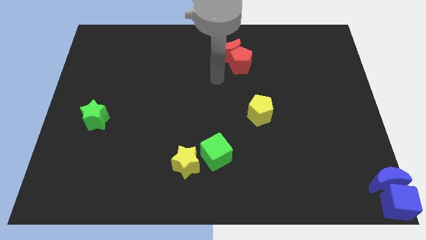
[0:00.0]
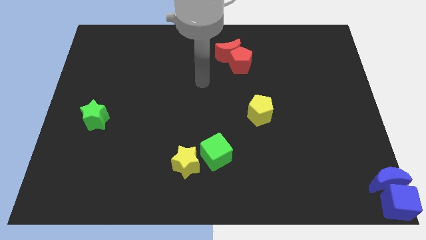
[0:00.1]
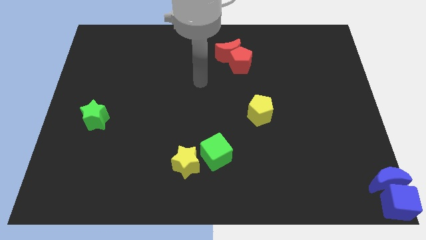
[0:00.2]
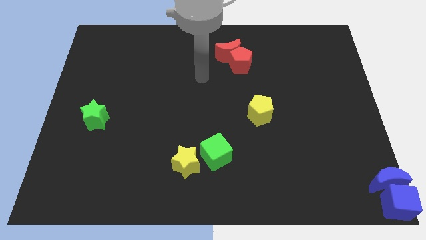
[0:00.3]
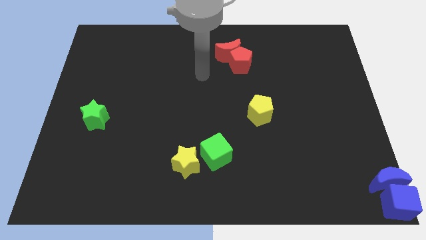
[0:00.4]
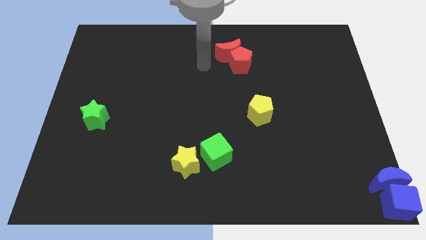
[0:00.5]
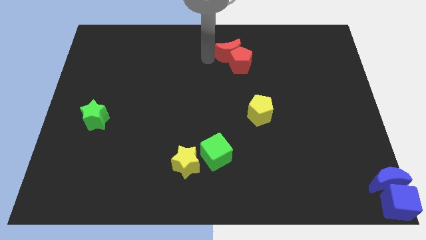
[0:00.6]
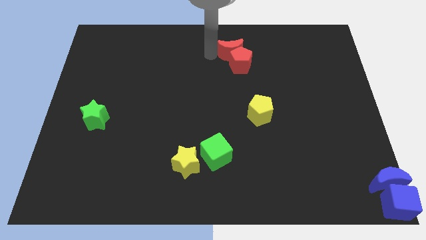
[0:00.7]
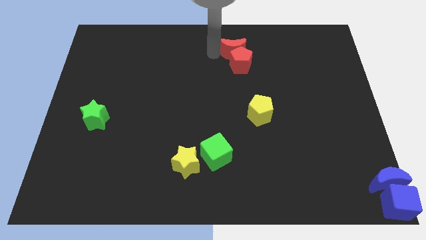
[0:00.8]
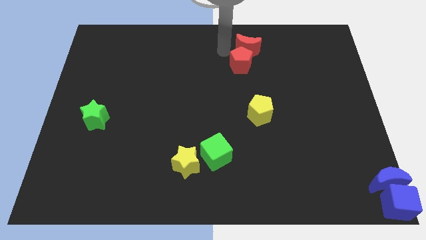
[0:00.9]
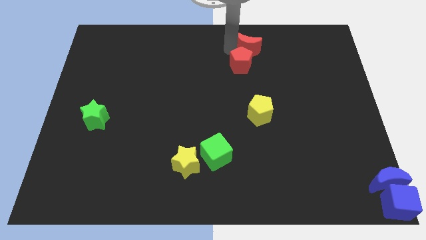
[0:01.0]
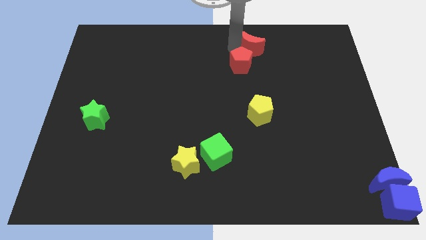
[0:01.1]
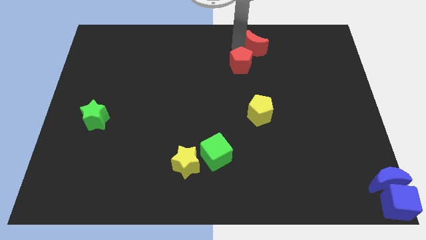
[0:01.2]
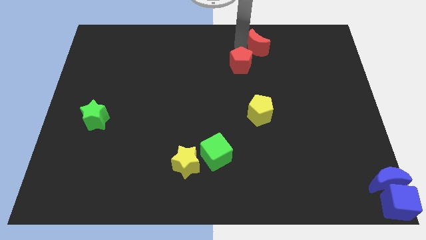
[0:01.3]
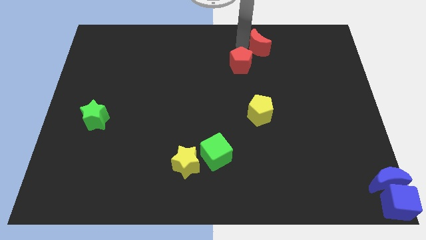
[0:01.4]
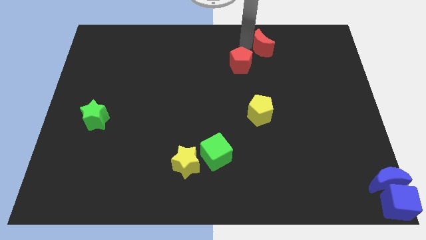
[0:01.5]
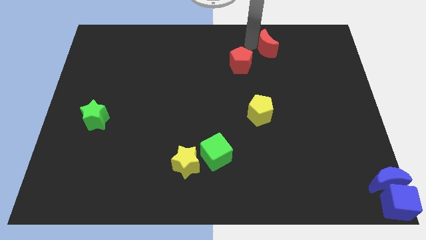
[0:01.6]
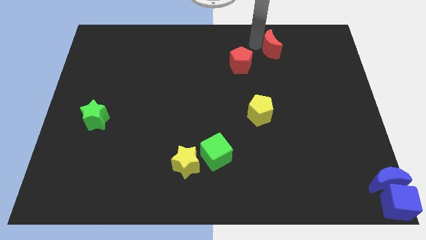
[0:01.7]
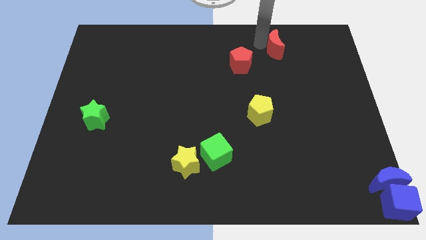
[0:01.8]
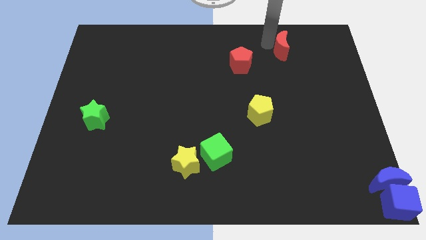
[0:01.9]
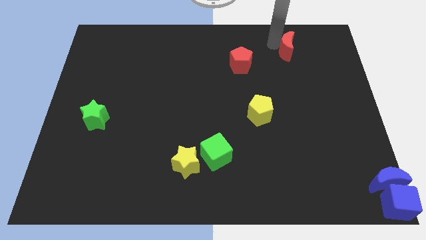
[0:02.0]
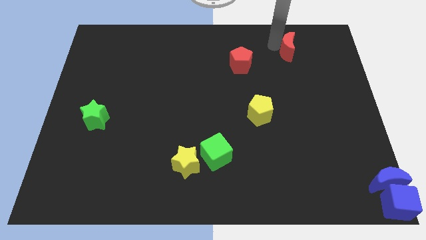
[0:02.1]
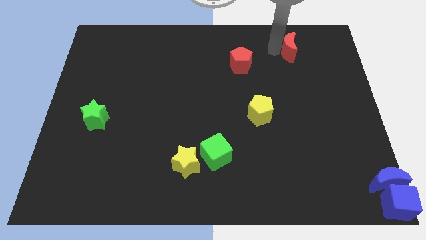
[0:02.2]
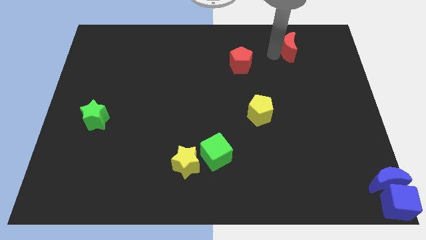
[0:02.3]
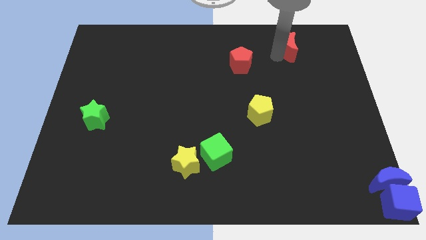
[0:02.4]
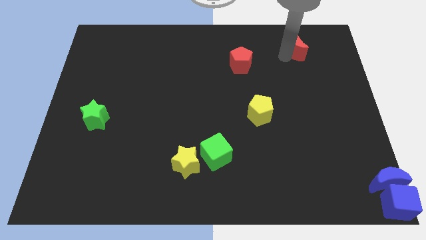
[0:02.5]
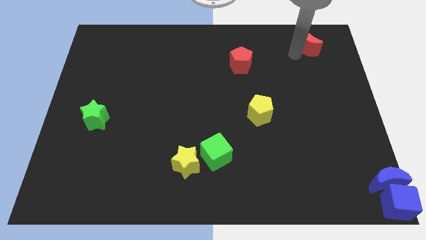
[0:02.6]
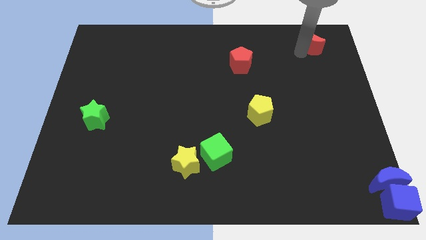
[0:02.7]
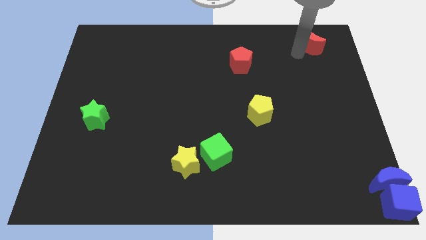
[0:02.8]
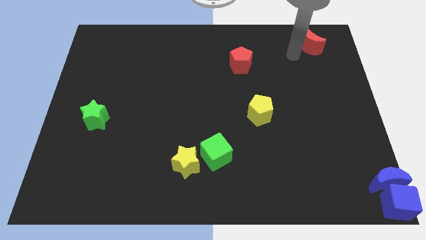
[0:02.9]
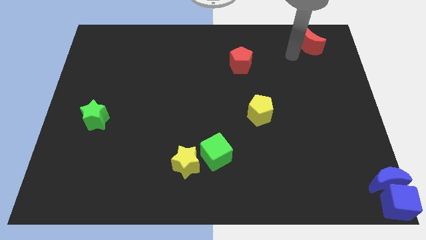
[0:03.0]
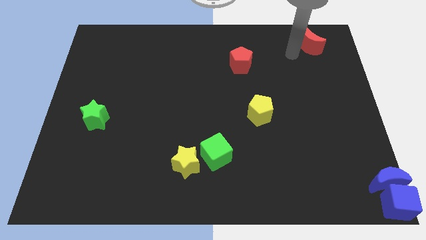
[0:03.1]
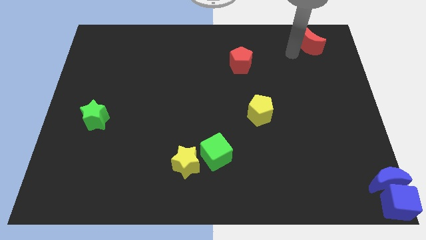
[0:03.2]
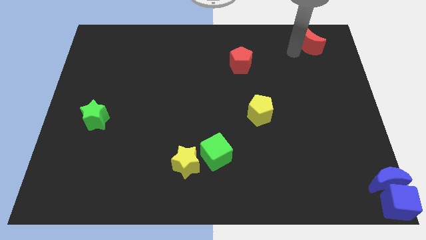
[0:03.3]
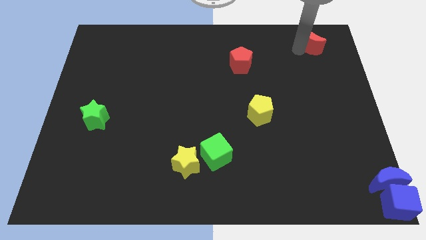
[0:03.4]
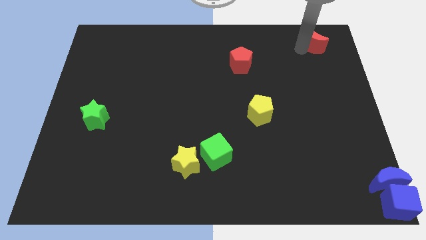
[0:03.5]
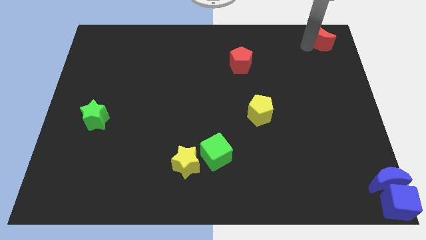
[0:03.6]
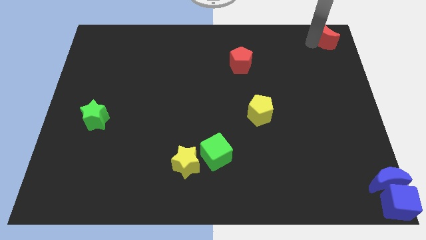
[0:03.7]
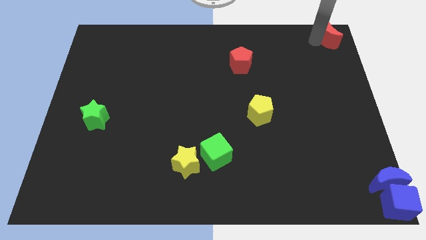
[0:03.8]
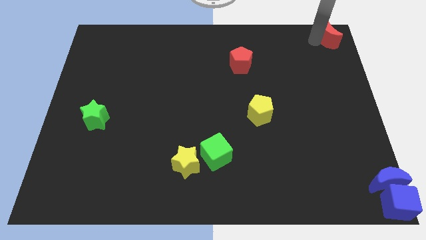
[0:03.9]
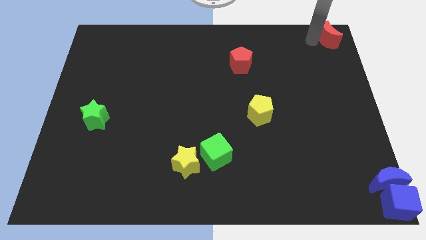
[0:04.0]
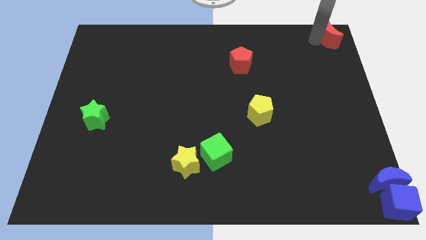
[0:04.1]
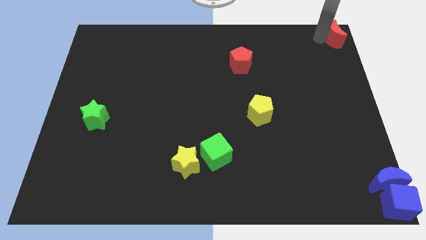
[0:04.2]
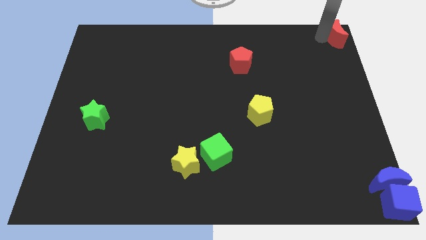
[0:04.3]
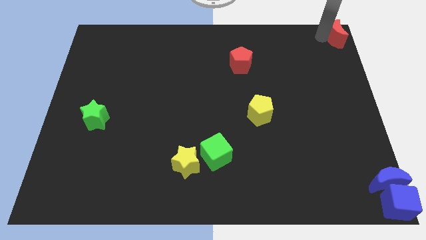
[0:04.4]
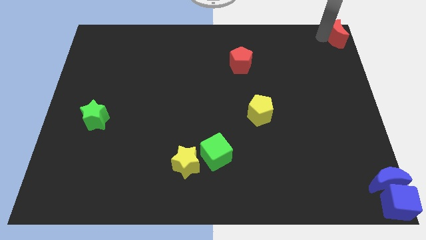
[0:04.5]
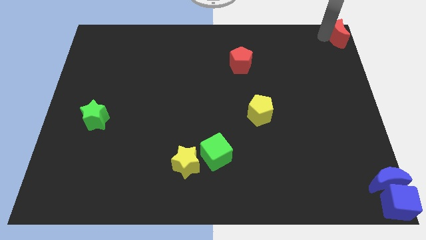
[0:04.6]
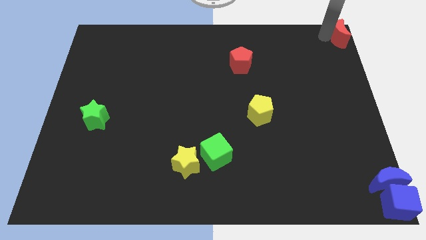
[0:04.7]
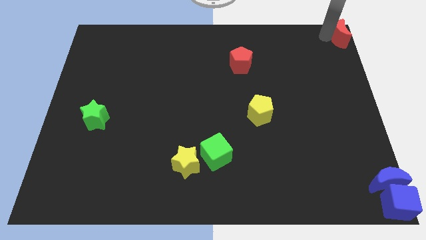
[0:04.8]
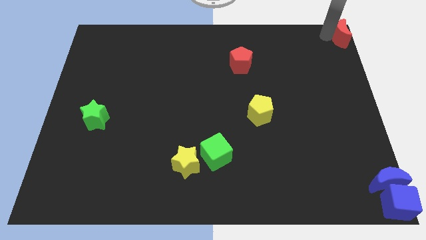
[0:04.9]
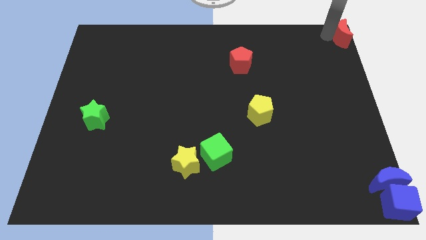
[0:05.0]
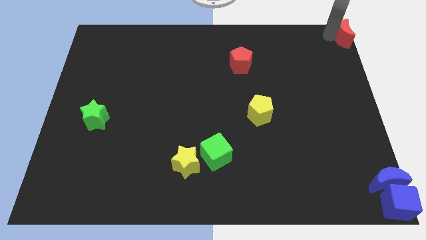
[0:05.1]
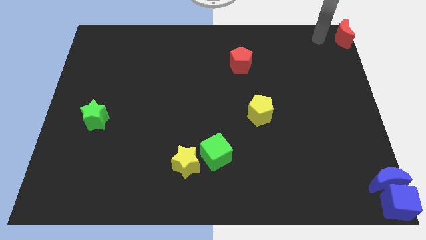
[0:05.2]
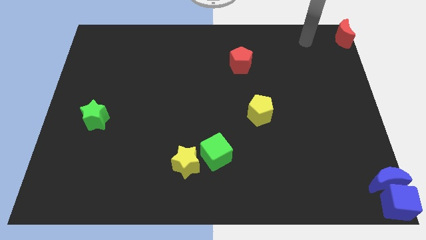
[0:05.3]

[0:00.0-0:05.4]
push the red crescent to the top right corner of the board

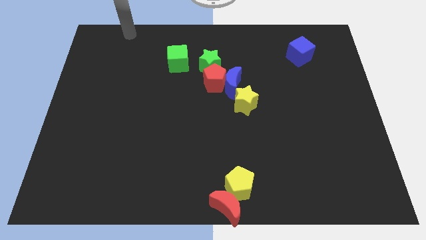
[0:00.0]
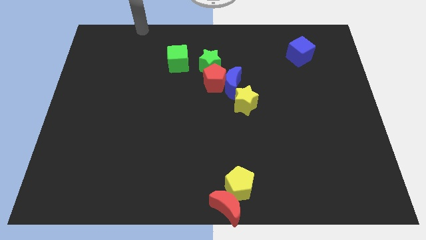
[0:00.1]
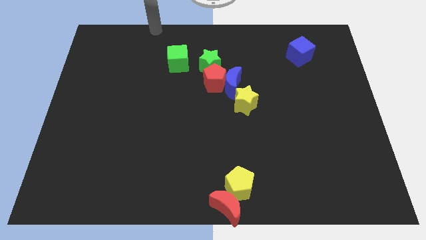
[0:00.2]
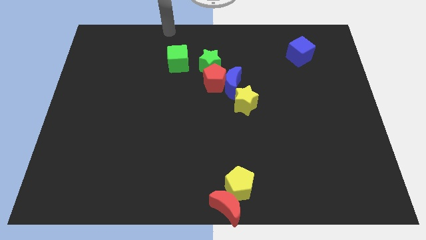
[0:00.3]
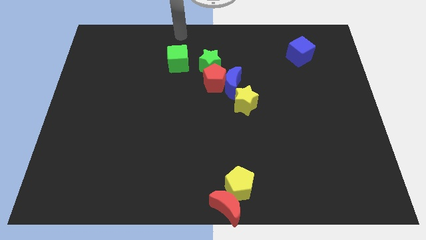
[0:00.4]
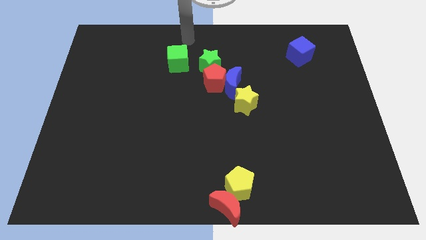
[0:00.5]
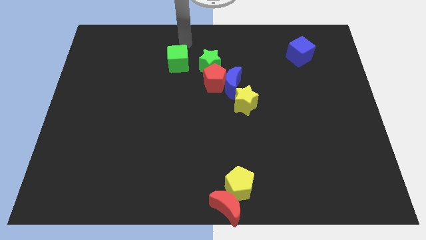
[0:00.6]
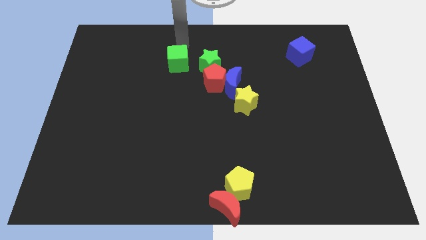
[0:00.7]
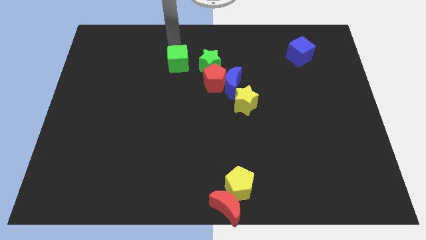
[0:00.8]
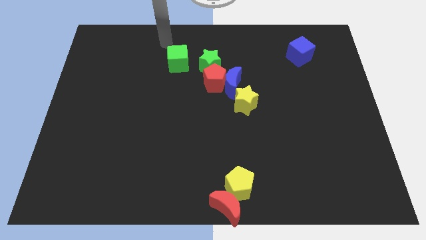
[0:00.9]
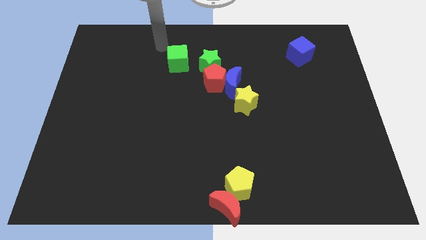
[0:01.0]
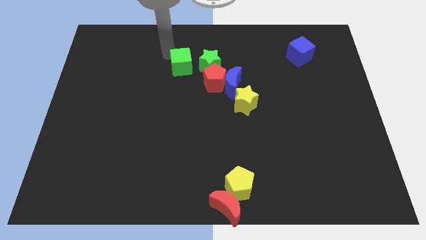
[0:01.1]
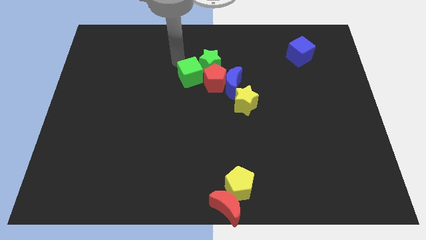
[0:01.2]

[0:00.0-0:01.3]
push the green cube towards the center of the board

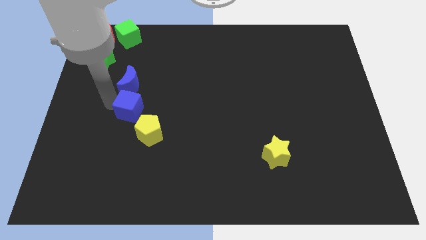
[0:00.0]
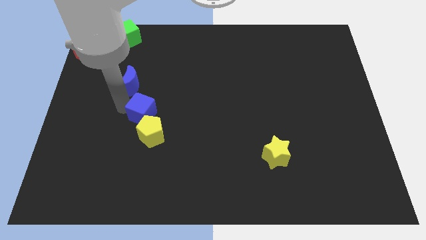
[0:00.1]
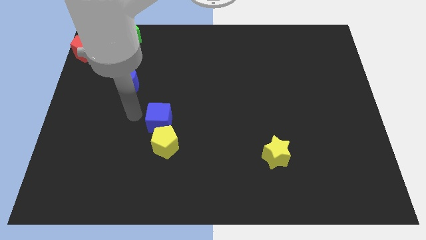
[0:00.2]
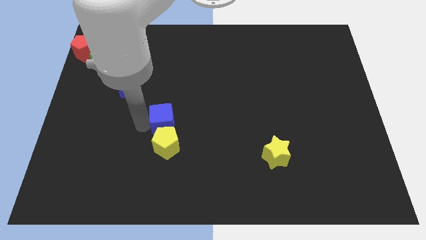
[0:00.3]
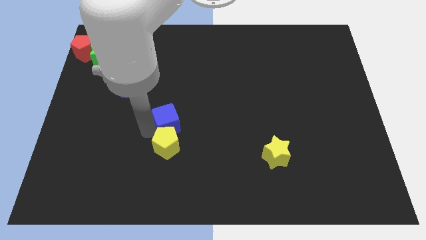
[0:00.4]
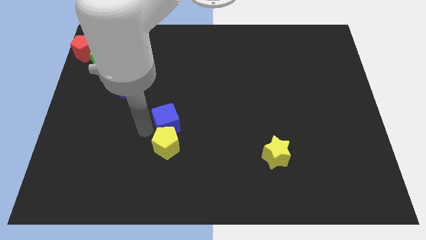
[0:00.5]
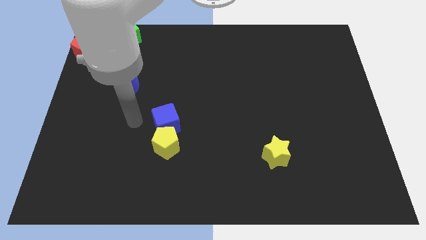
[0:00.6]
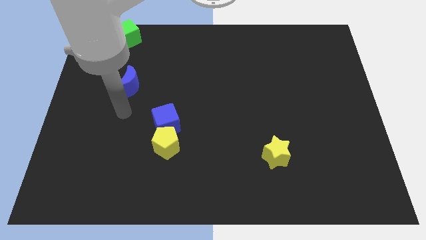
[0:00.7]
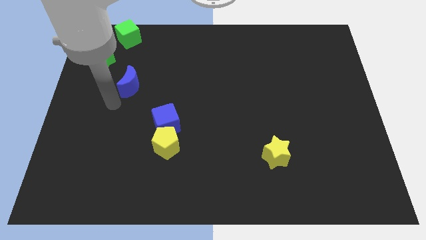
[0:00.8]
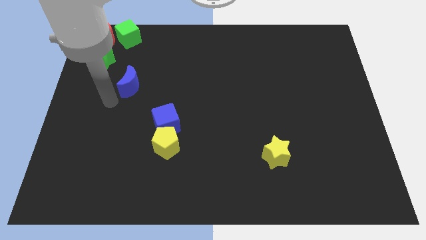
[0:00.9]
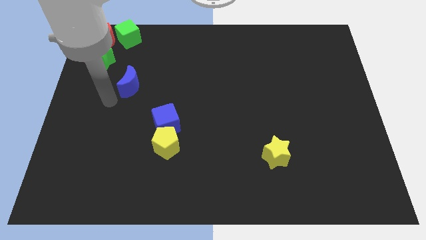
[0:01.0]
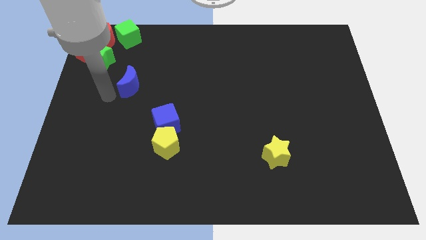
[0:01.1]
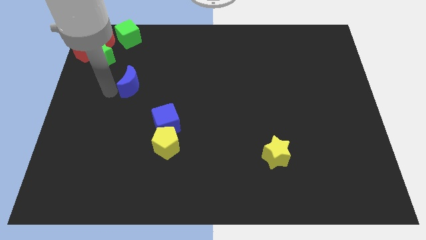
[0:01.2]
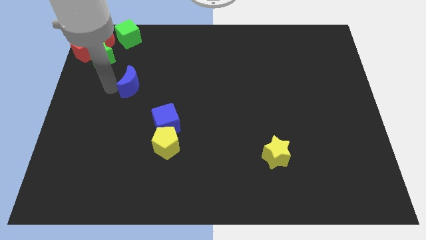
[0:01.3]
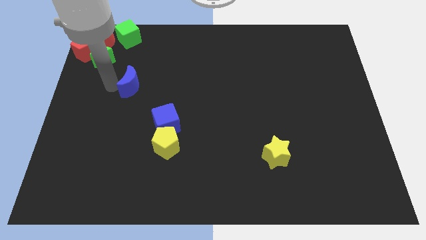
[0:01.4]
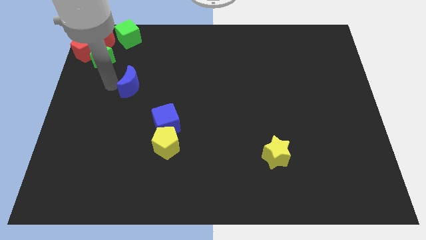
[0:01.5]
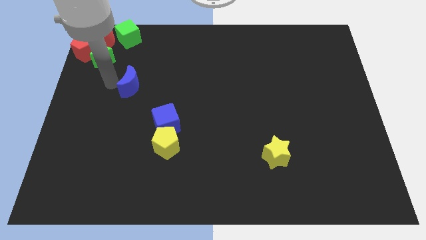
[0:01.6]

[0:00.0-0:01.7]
drag the blue cube close to the yellow pentagon

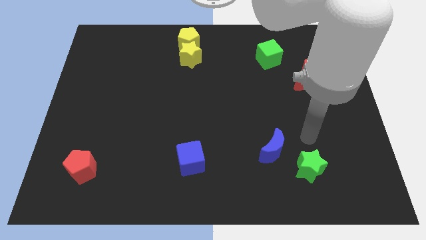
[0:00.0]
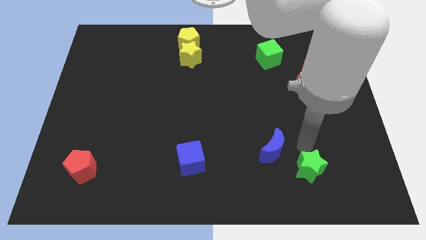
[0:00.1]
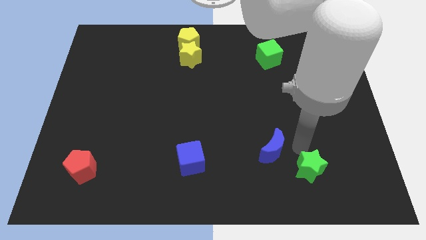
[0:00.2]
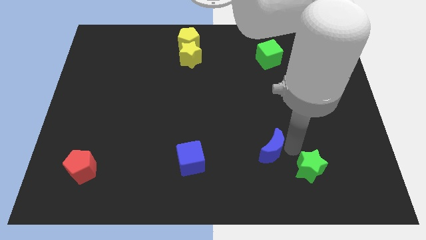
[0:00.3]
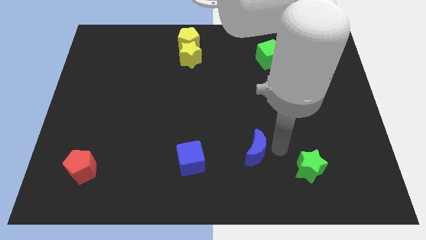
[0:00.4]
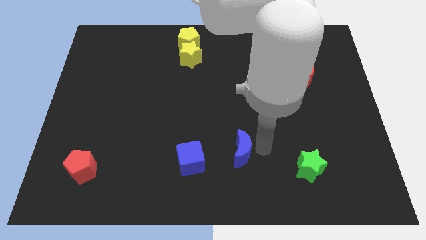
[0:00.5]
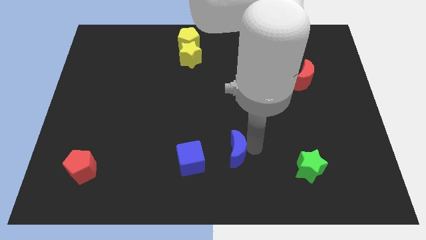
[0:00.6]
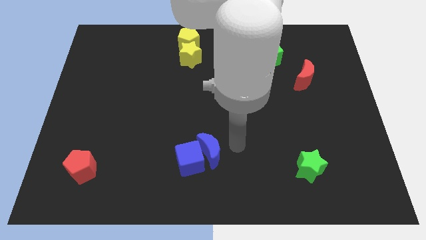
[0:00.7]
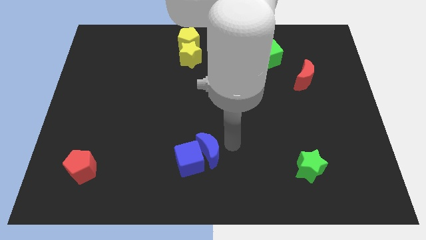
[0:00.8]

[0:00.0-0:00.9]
push blue crescent close to blue cube
